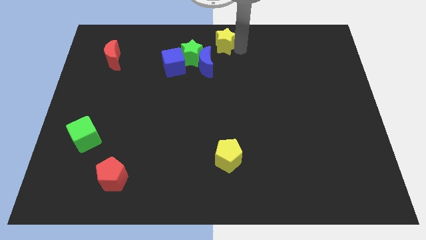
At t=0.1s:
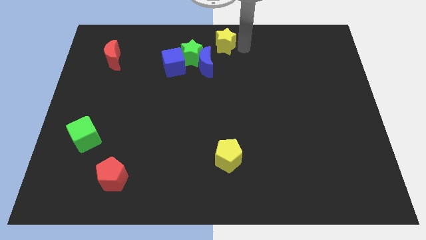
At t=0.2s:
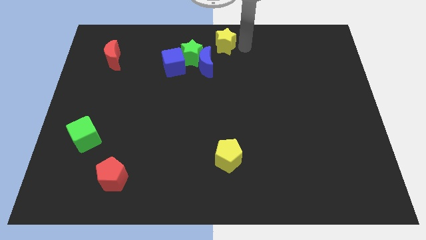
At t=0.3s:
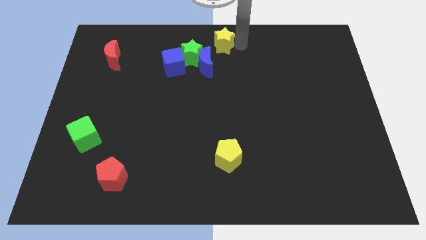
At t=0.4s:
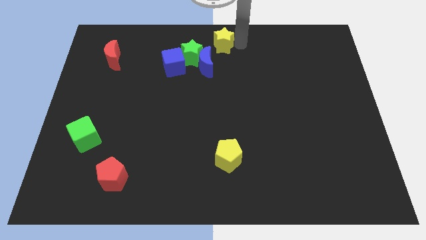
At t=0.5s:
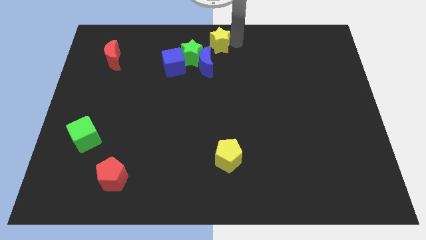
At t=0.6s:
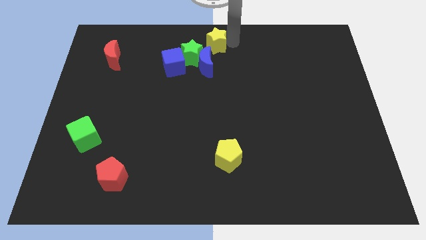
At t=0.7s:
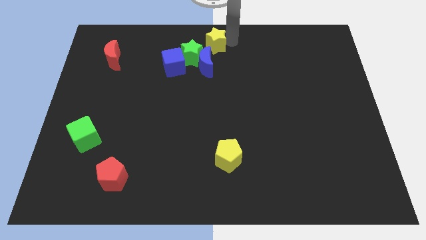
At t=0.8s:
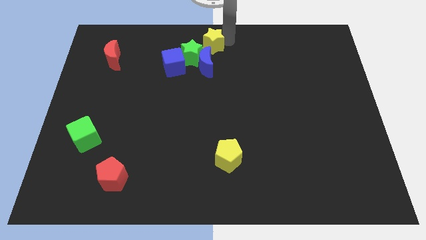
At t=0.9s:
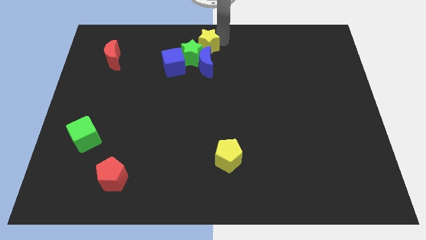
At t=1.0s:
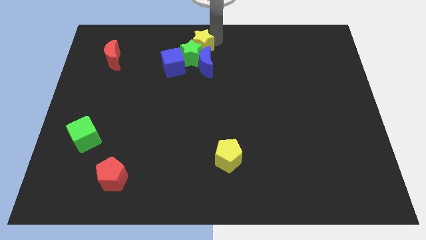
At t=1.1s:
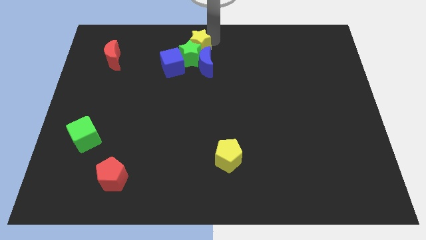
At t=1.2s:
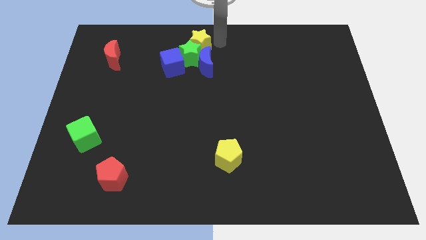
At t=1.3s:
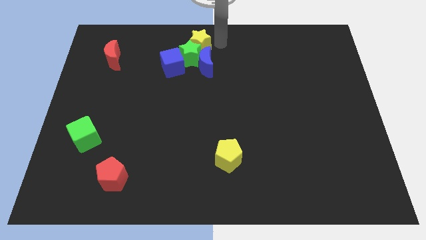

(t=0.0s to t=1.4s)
move the yellow star into the top of the green star

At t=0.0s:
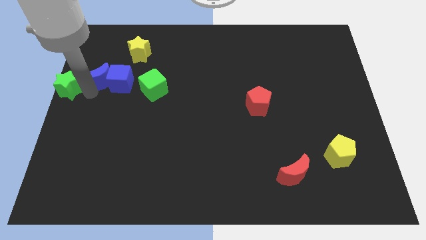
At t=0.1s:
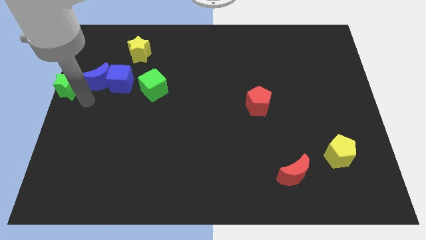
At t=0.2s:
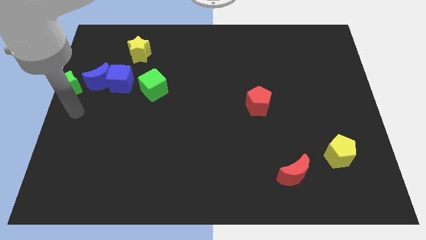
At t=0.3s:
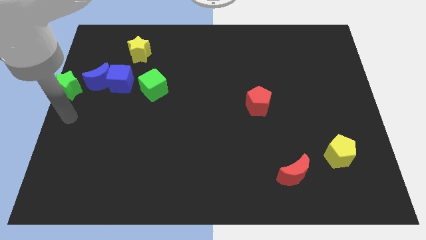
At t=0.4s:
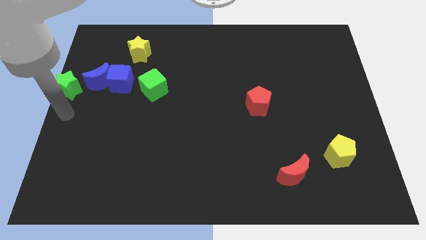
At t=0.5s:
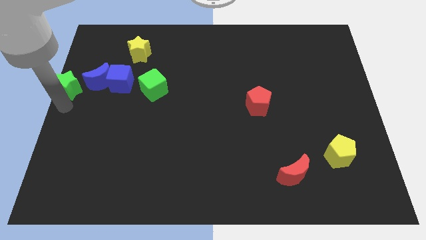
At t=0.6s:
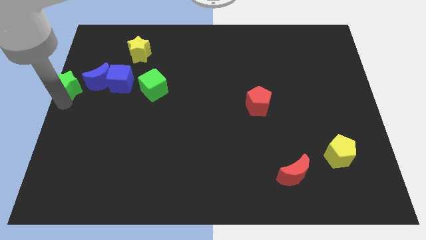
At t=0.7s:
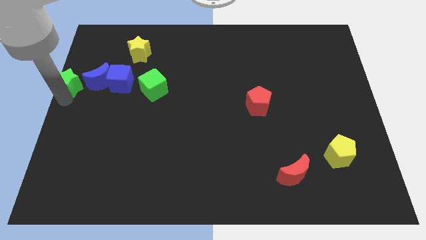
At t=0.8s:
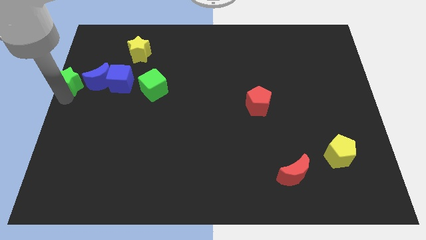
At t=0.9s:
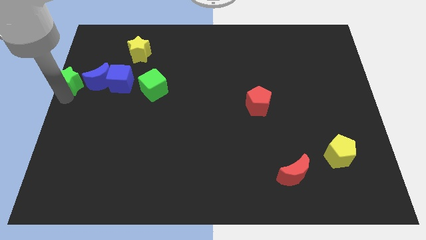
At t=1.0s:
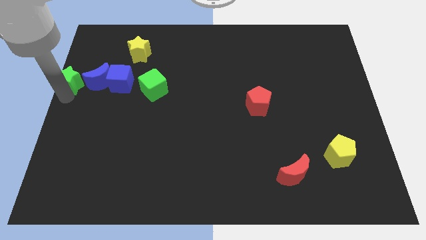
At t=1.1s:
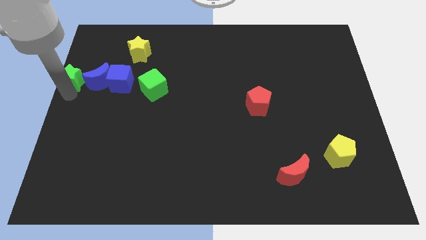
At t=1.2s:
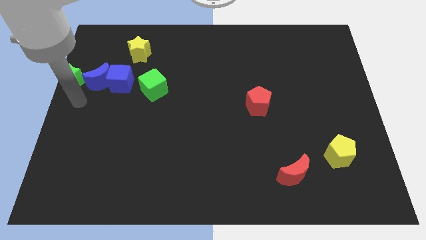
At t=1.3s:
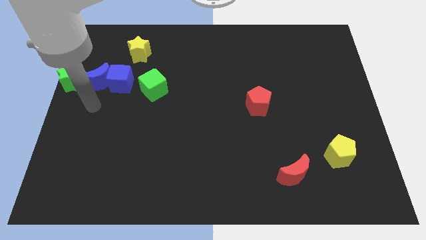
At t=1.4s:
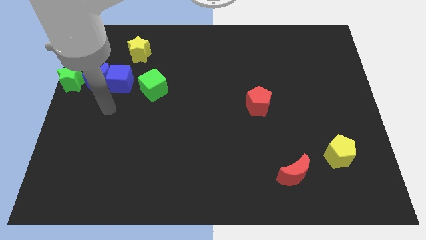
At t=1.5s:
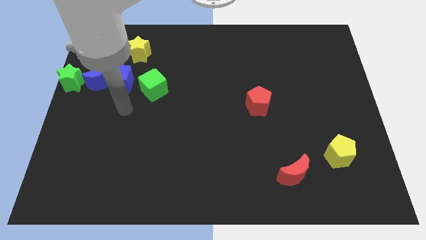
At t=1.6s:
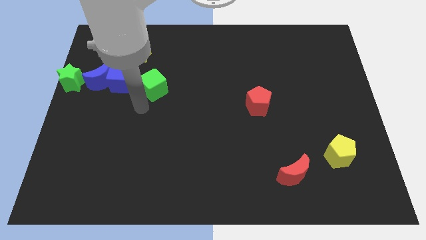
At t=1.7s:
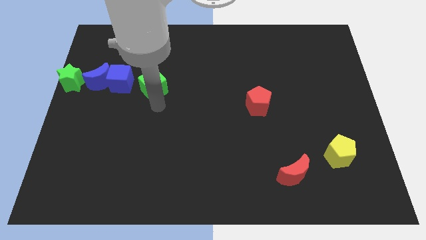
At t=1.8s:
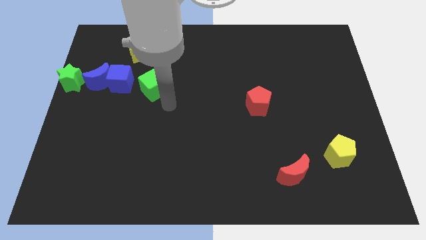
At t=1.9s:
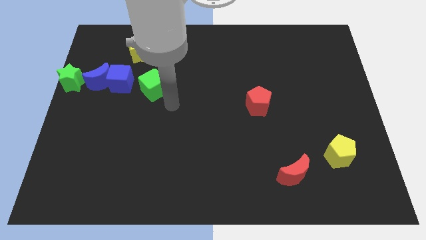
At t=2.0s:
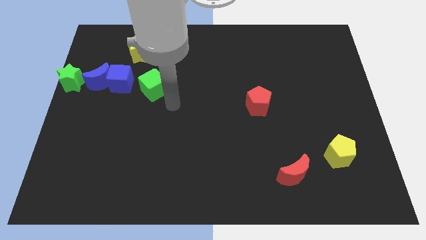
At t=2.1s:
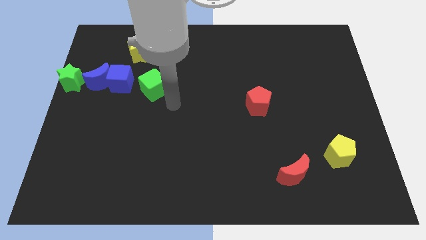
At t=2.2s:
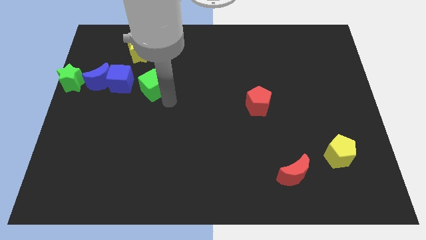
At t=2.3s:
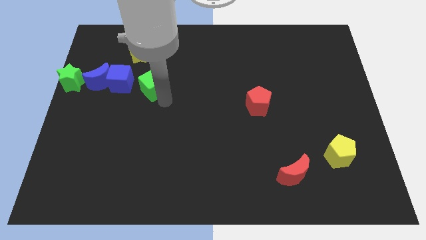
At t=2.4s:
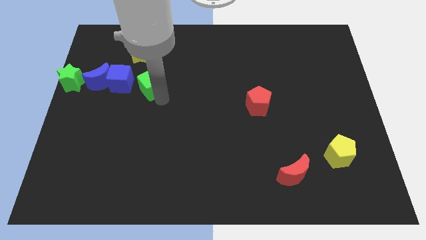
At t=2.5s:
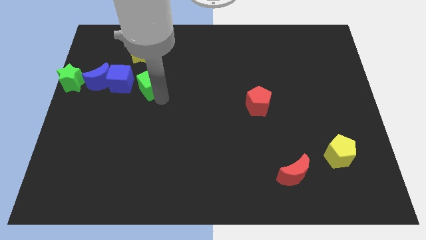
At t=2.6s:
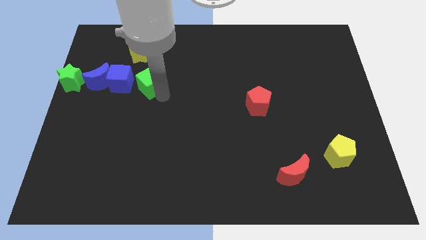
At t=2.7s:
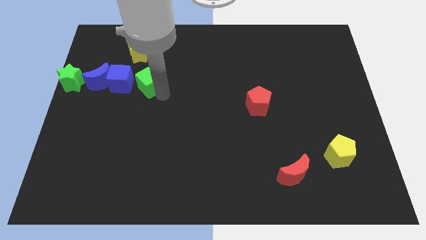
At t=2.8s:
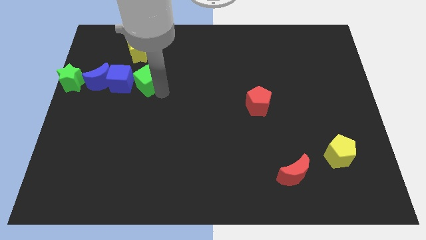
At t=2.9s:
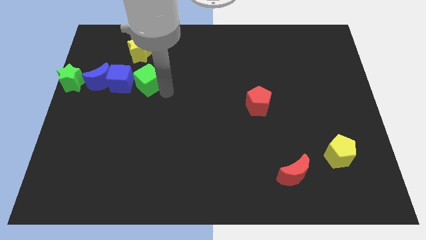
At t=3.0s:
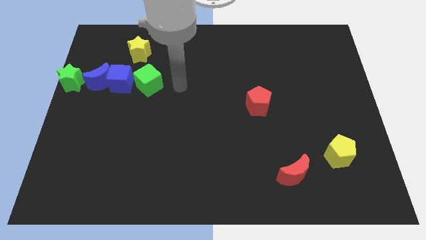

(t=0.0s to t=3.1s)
place blue blocks in the middle of green cube and green star

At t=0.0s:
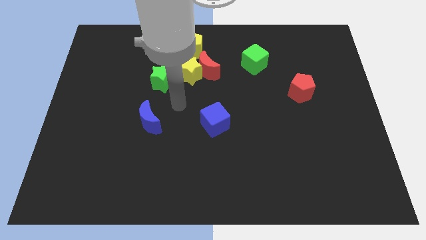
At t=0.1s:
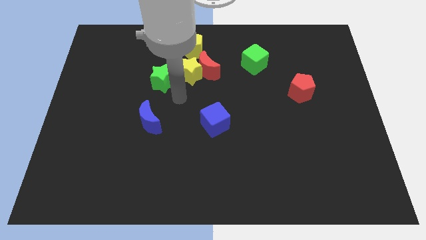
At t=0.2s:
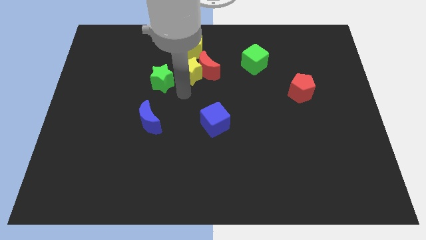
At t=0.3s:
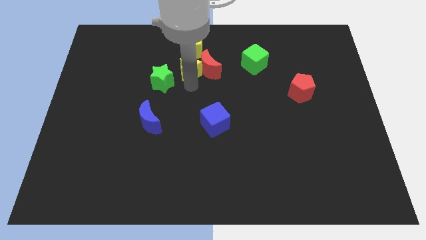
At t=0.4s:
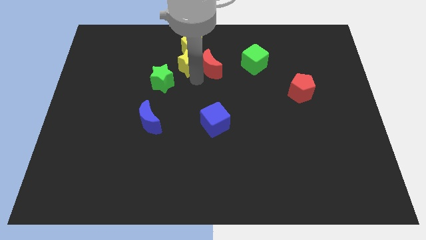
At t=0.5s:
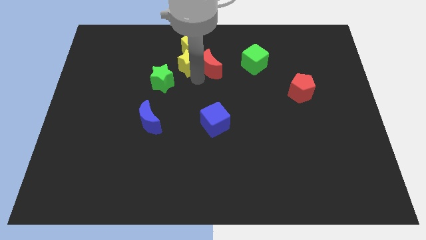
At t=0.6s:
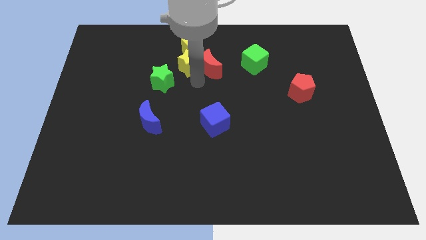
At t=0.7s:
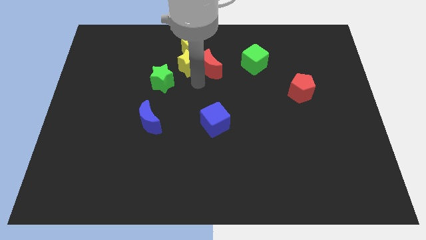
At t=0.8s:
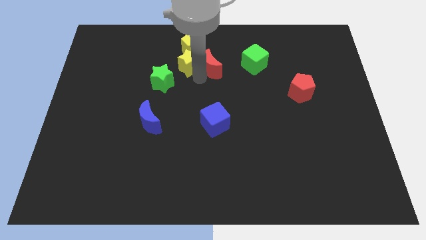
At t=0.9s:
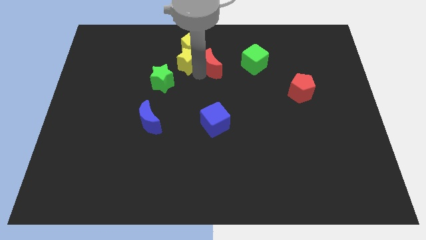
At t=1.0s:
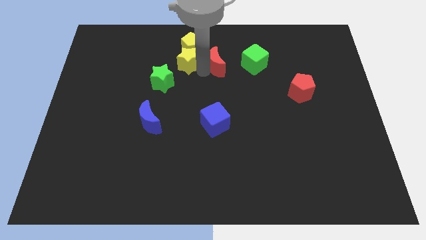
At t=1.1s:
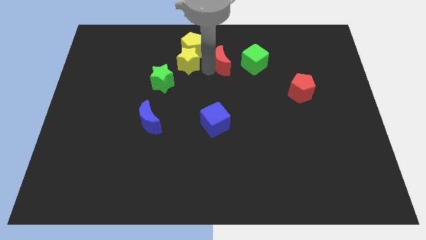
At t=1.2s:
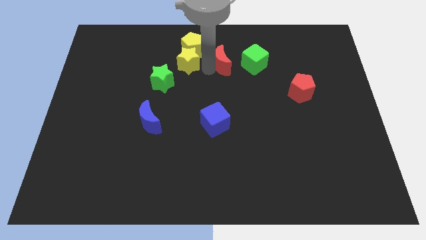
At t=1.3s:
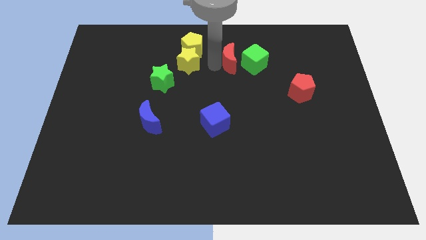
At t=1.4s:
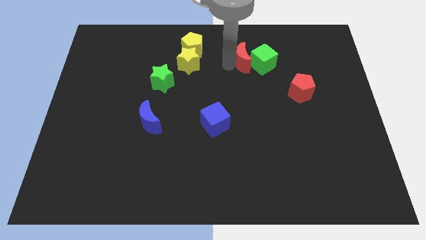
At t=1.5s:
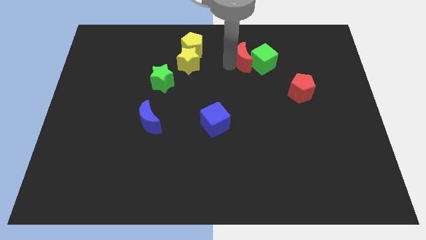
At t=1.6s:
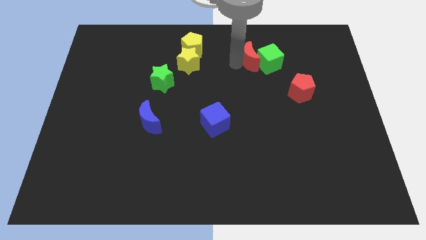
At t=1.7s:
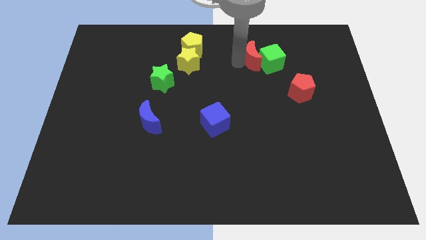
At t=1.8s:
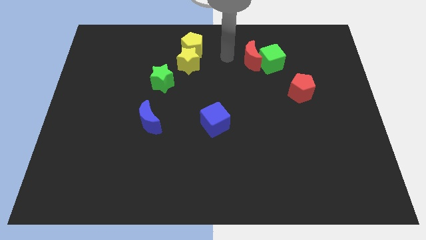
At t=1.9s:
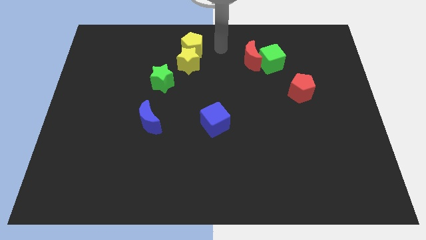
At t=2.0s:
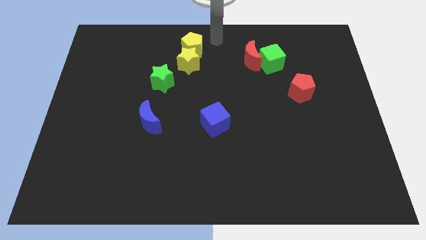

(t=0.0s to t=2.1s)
separate red moon from yellow star

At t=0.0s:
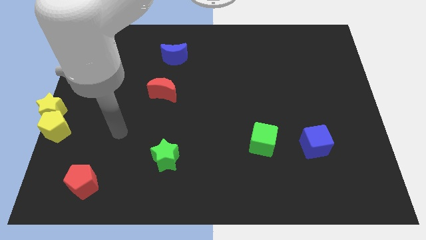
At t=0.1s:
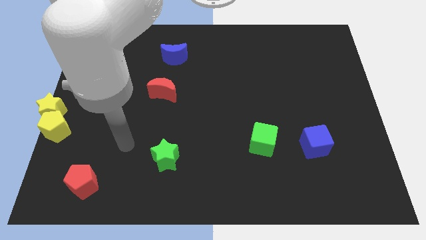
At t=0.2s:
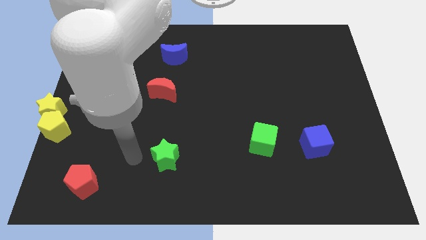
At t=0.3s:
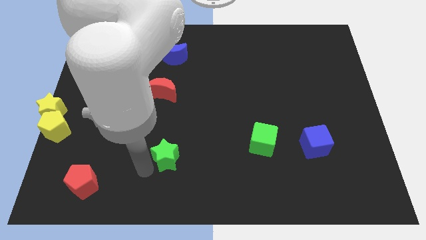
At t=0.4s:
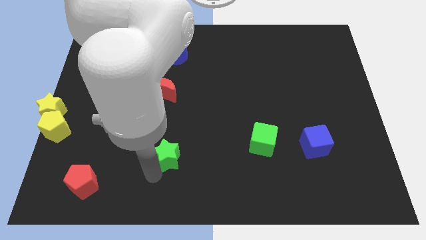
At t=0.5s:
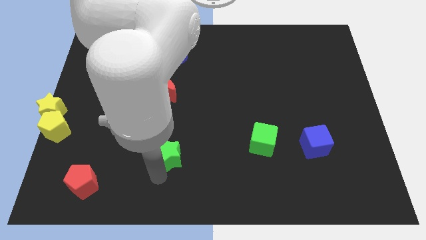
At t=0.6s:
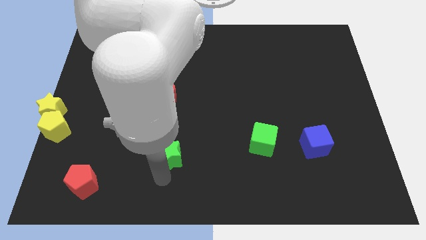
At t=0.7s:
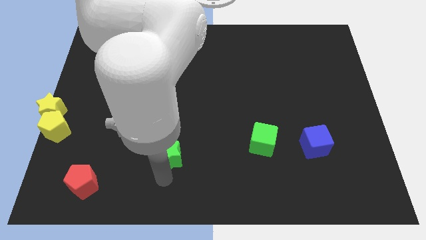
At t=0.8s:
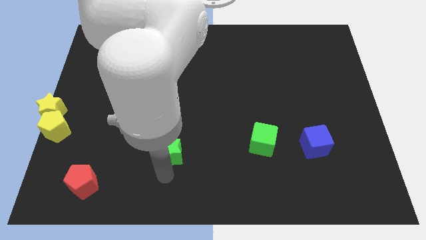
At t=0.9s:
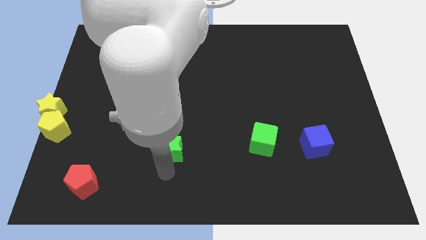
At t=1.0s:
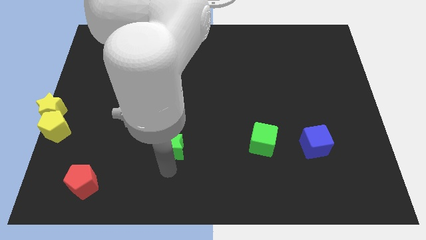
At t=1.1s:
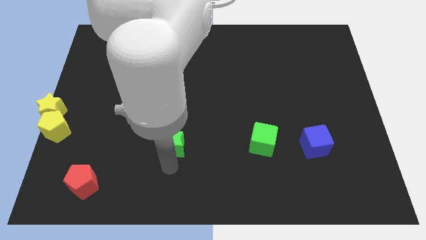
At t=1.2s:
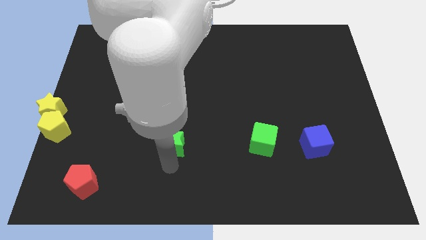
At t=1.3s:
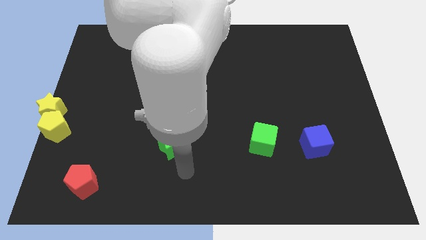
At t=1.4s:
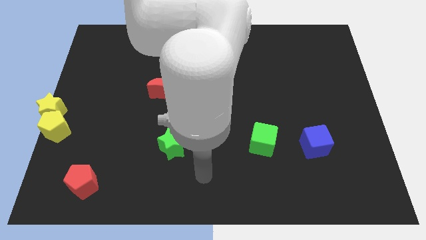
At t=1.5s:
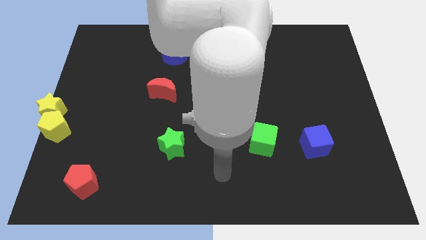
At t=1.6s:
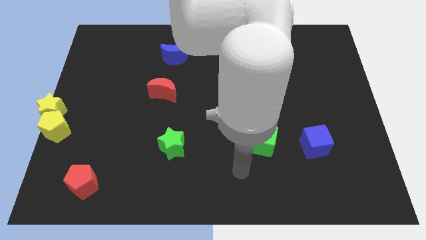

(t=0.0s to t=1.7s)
move the green star slightly up

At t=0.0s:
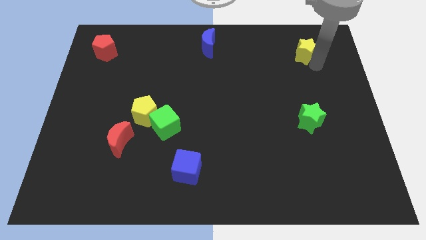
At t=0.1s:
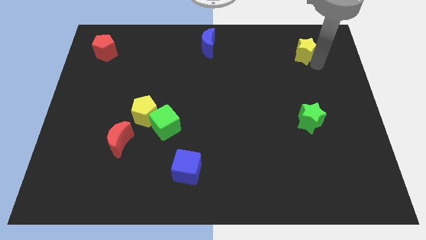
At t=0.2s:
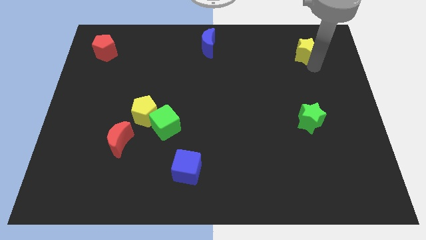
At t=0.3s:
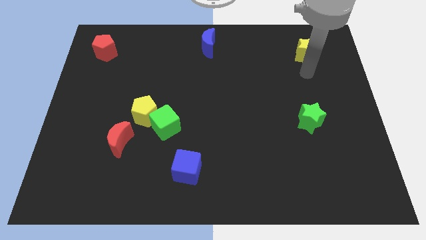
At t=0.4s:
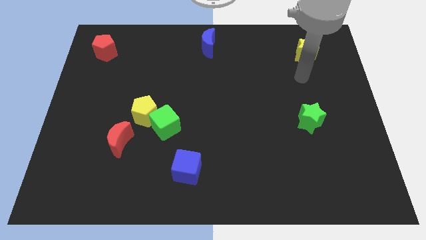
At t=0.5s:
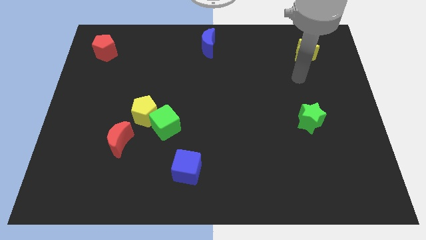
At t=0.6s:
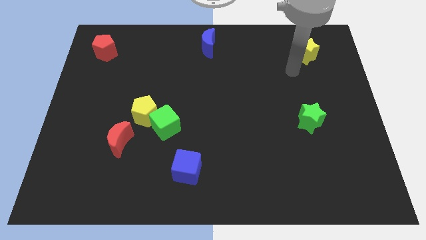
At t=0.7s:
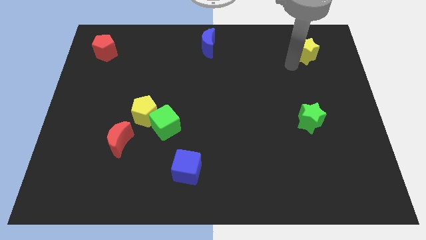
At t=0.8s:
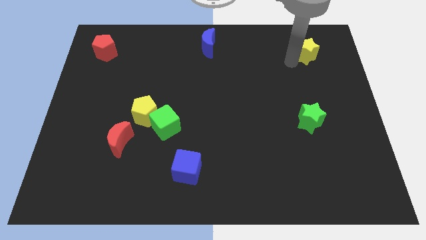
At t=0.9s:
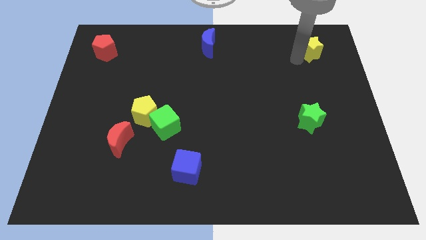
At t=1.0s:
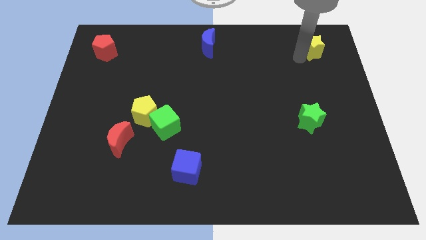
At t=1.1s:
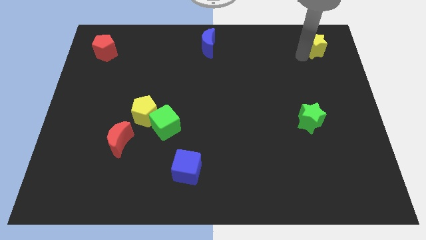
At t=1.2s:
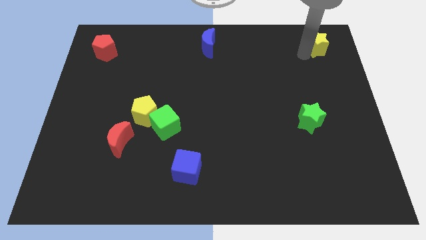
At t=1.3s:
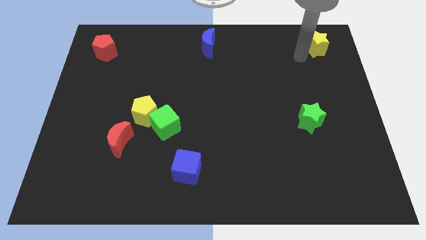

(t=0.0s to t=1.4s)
place a yellow star on the top right corner of the board
